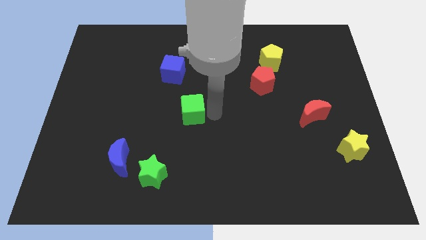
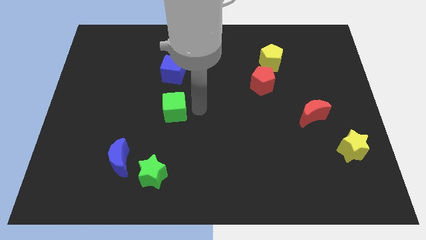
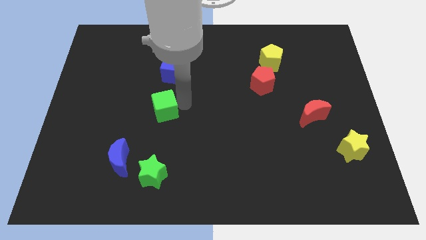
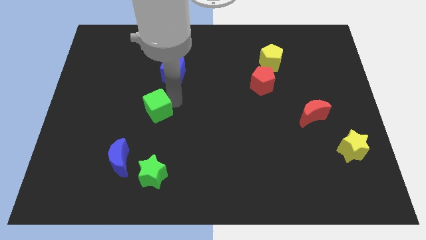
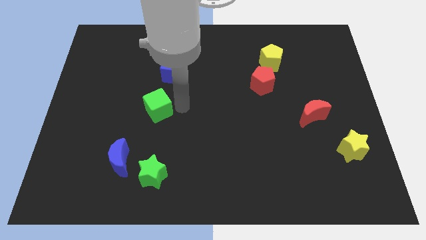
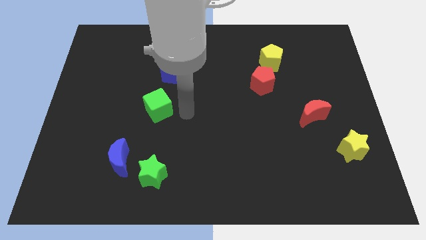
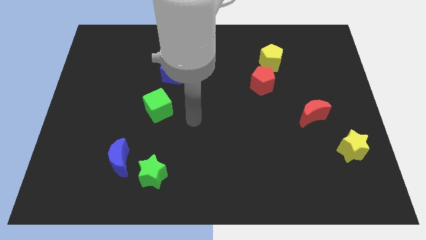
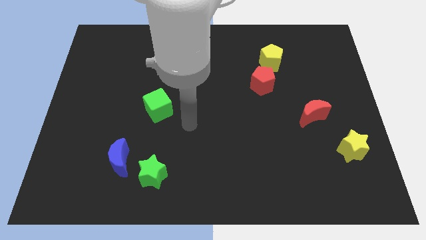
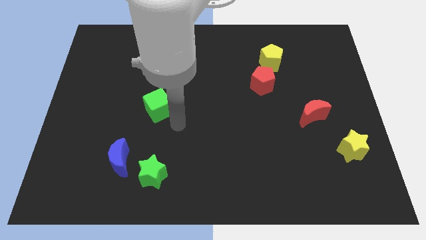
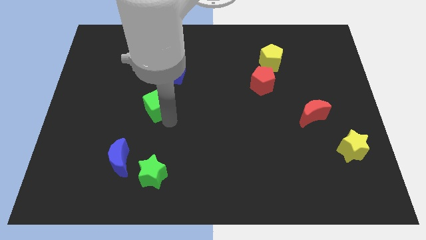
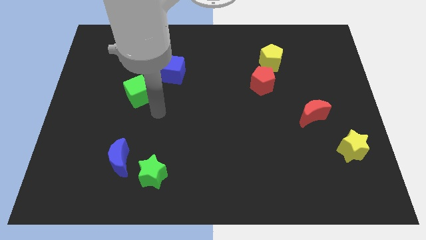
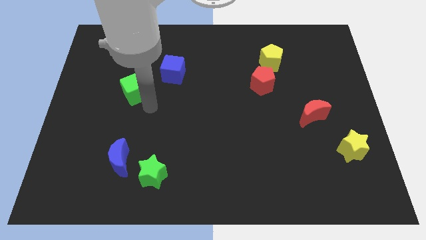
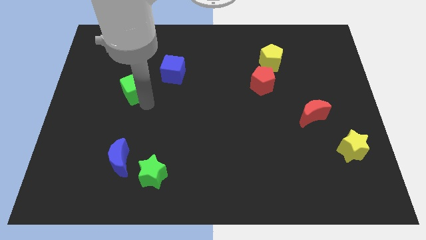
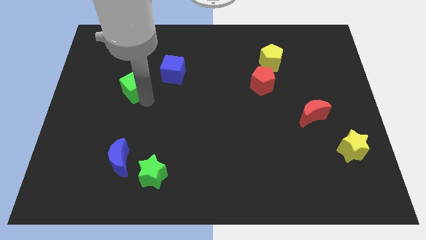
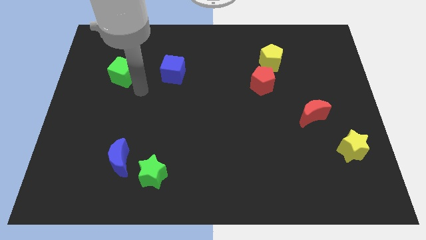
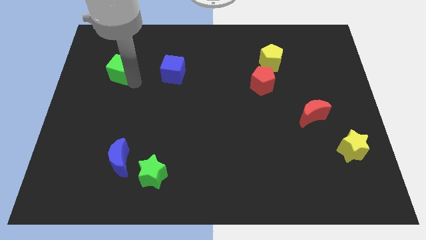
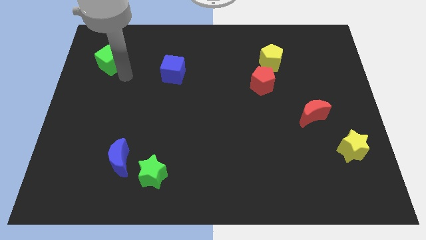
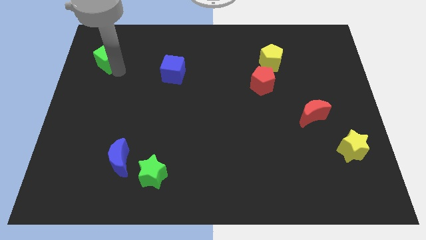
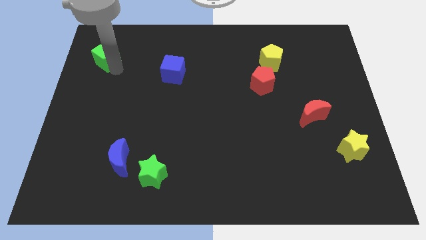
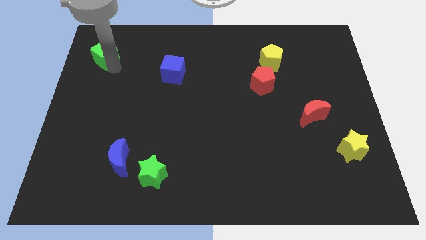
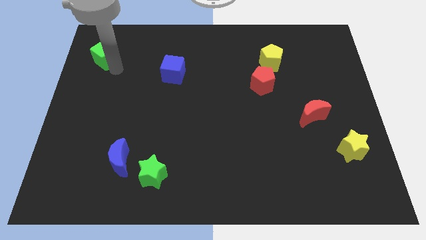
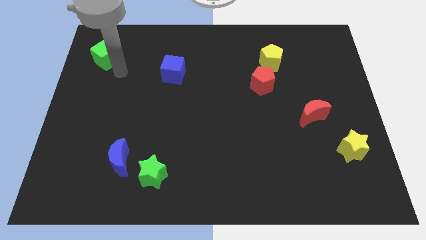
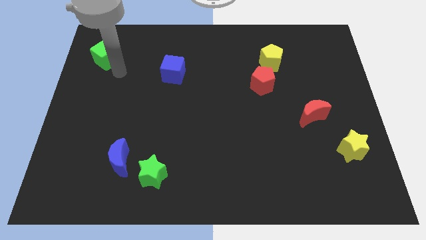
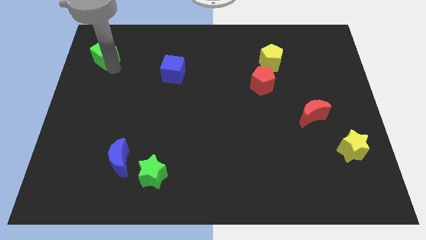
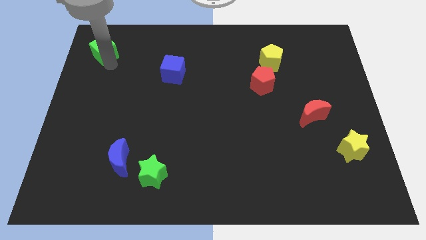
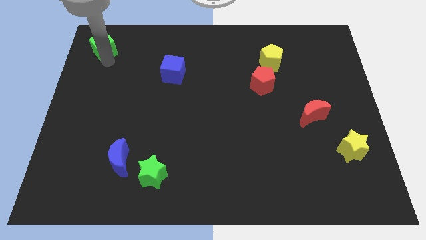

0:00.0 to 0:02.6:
push the green cube towards the top left corner

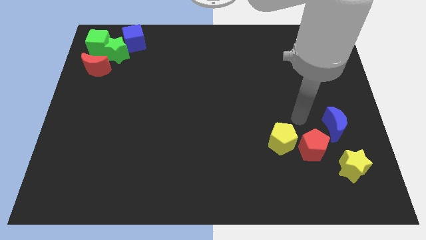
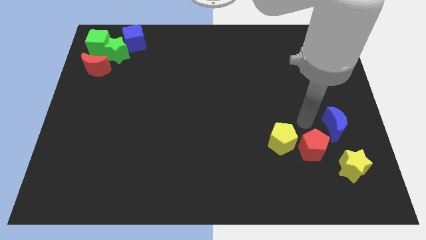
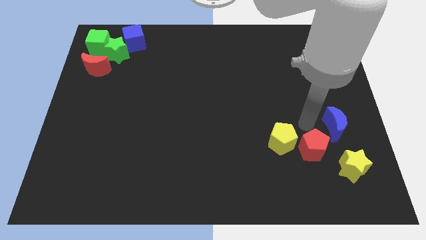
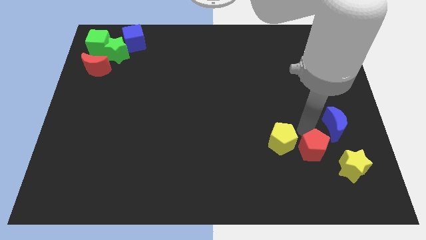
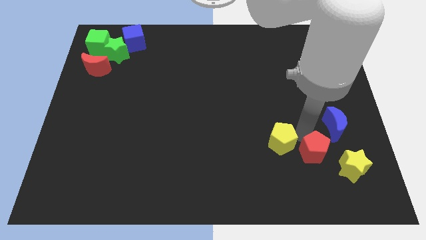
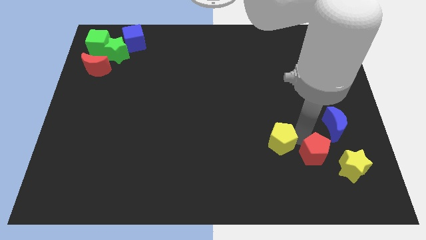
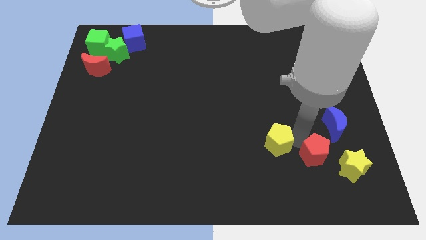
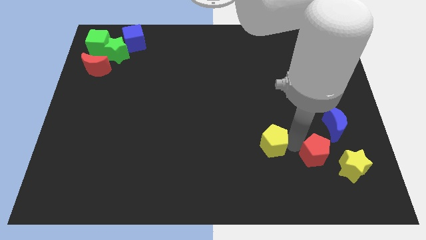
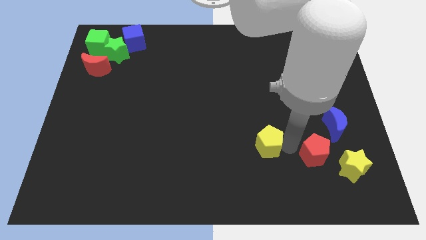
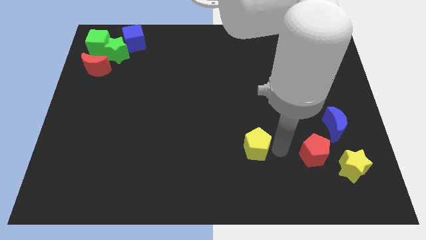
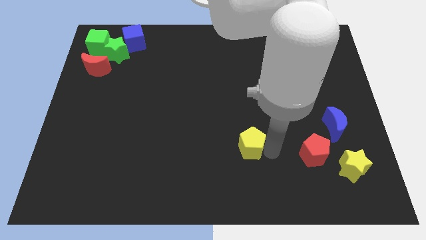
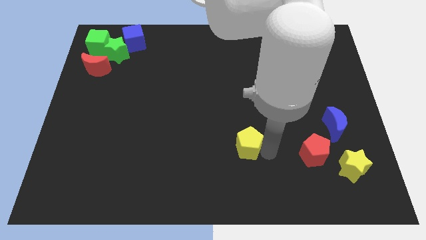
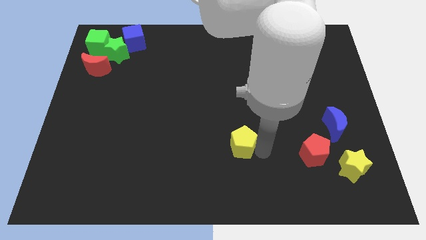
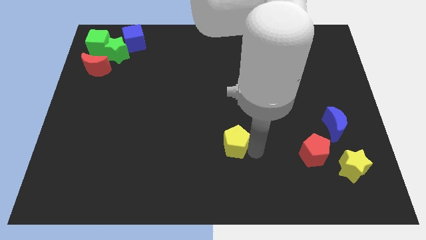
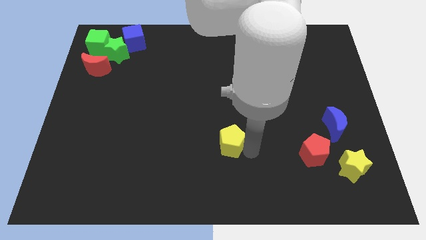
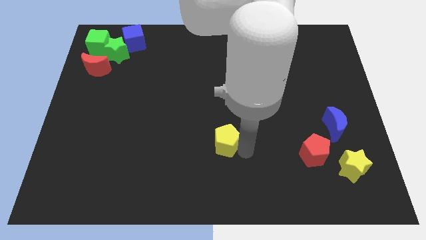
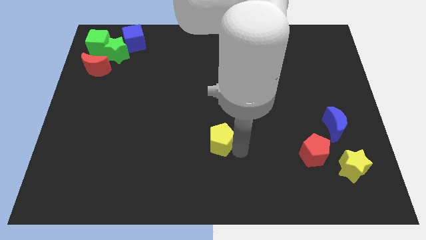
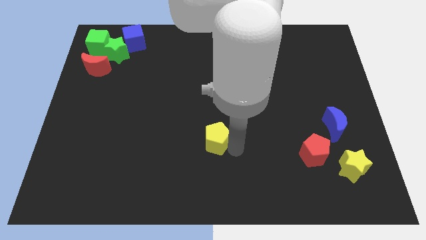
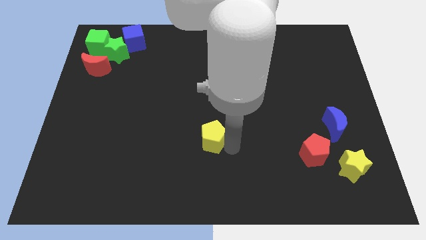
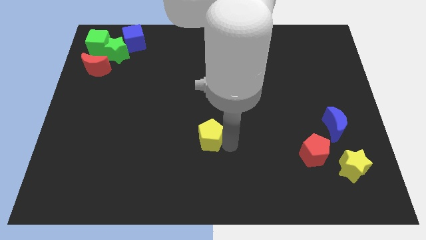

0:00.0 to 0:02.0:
separate the yellow pentagon from the red pentagon

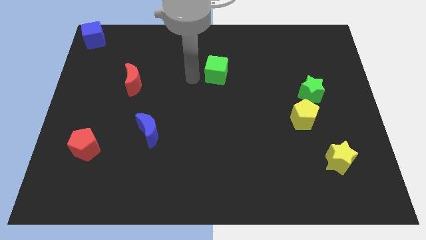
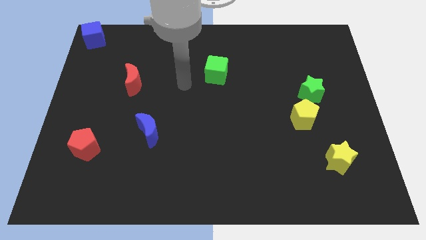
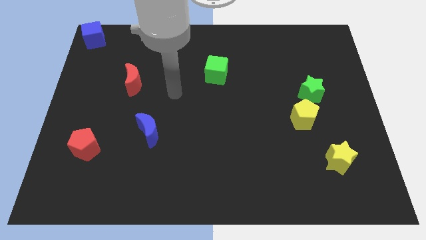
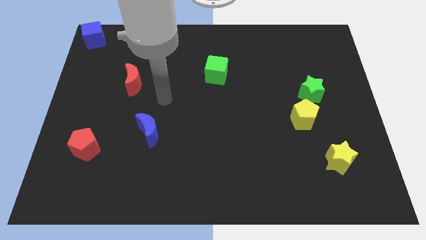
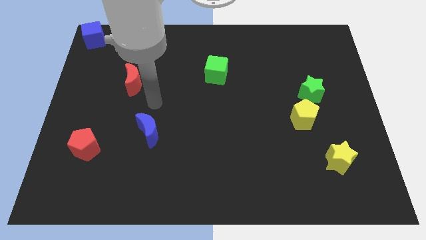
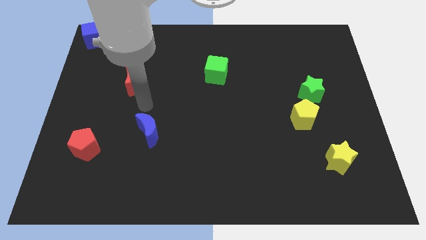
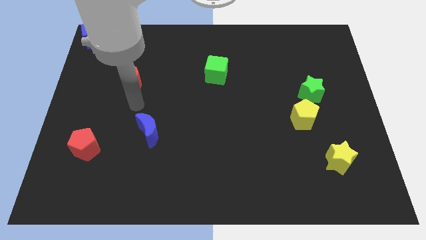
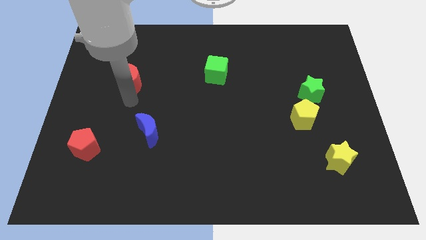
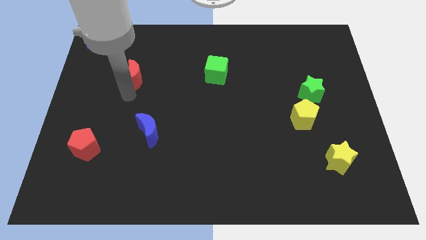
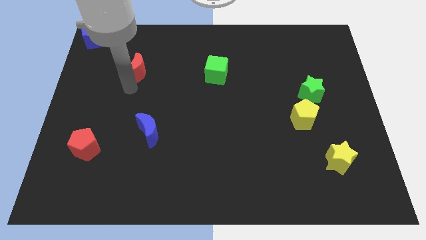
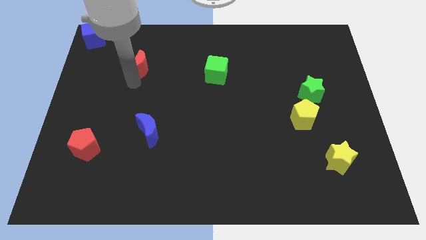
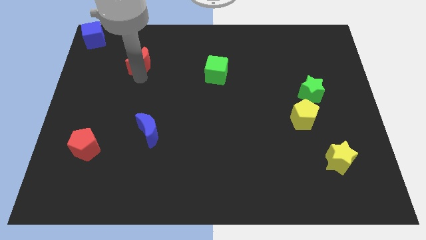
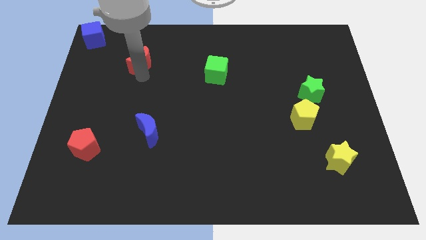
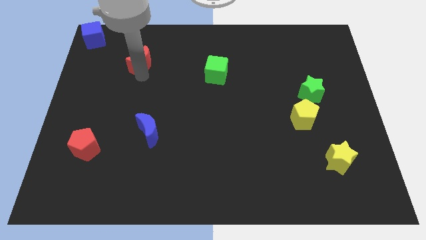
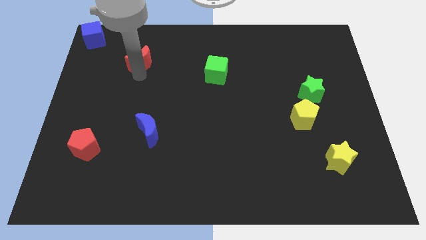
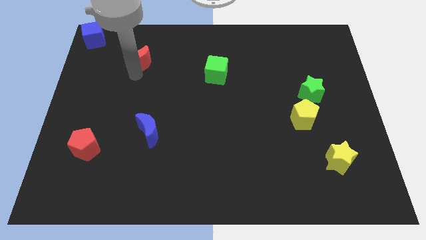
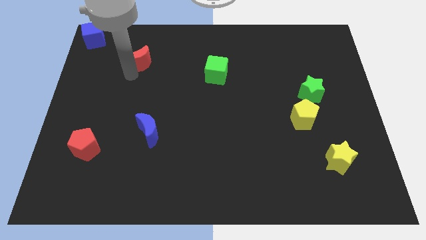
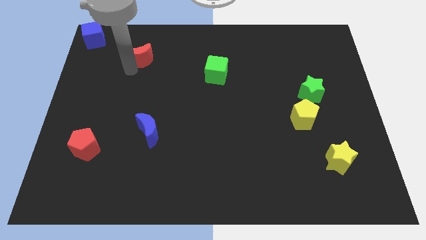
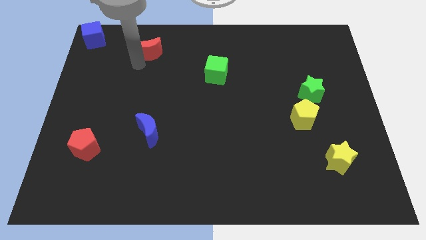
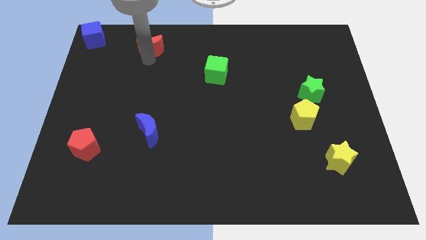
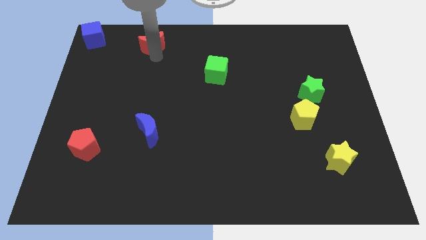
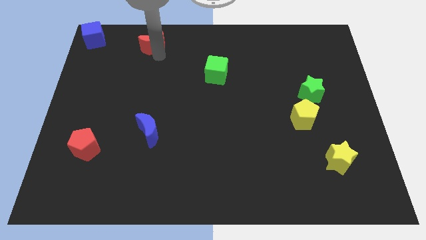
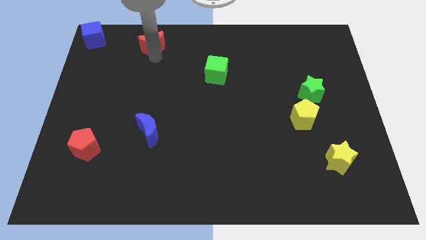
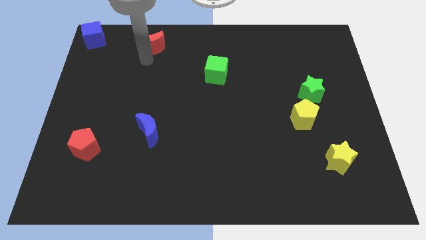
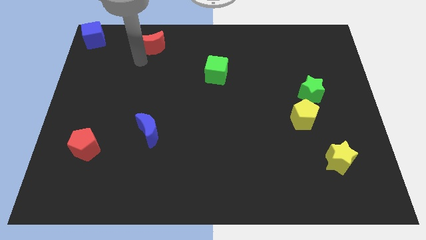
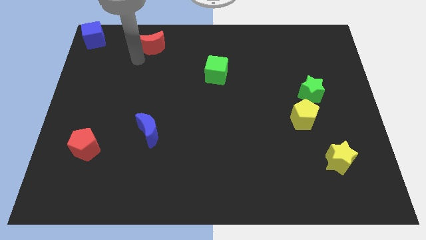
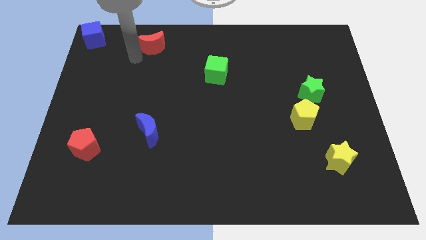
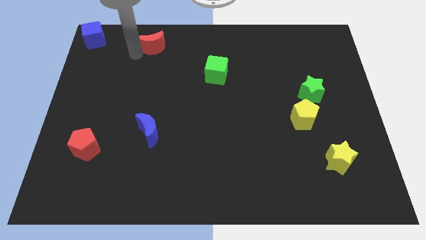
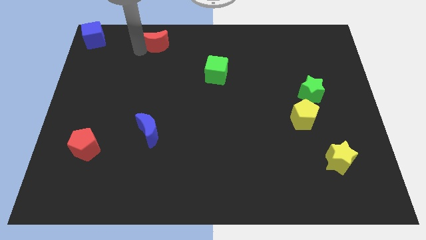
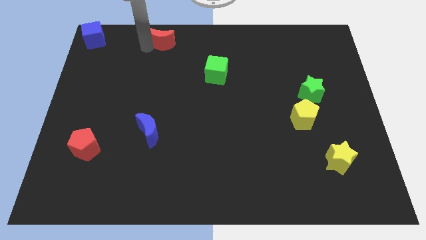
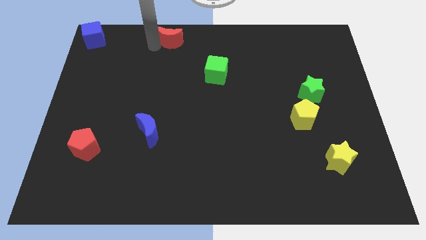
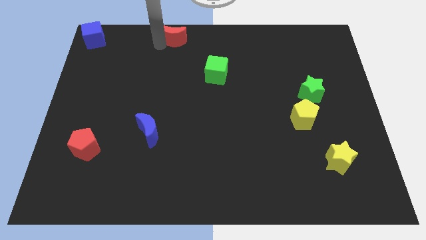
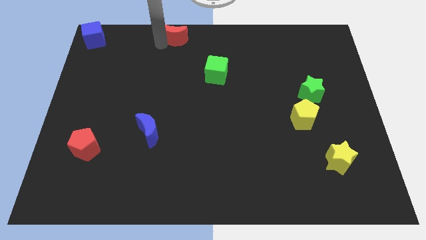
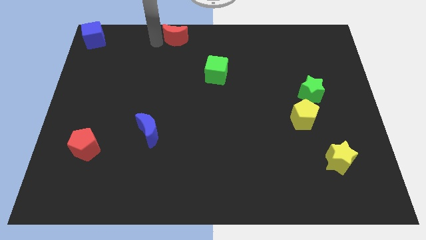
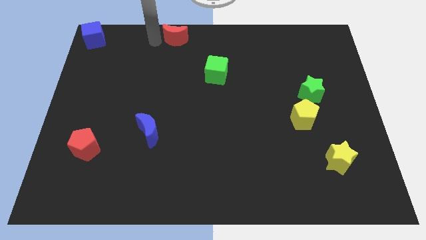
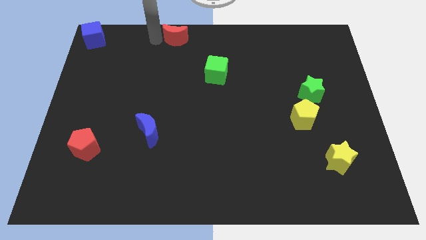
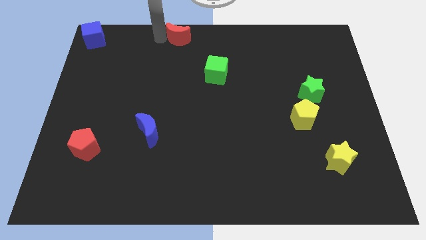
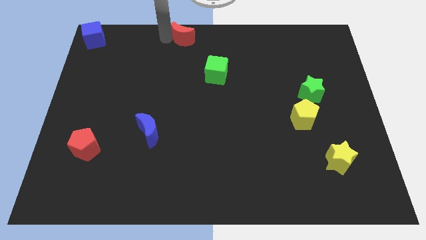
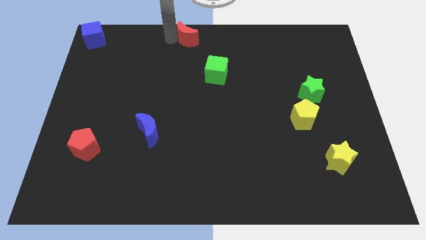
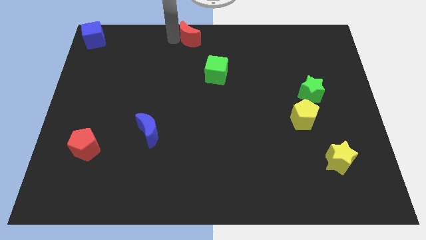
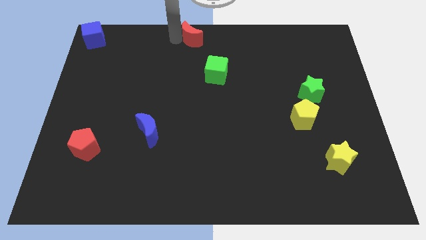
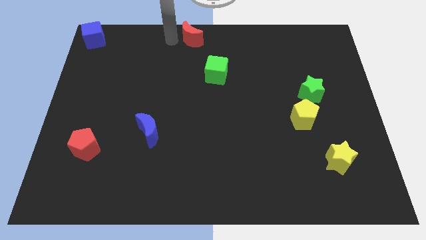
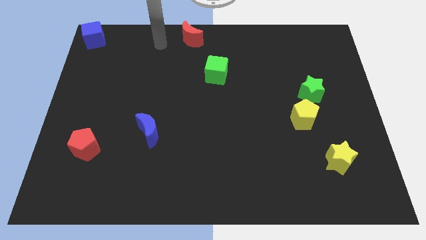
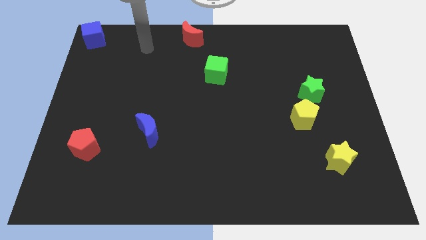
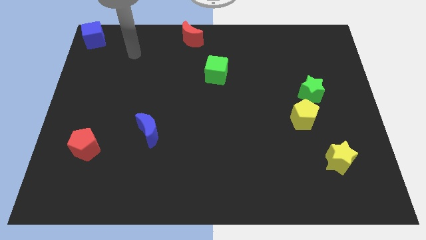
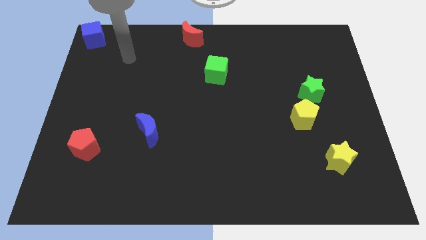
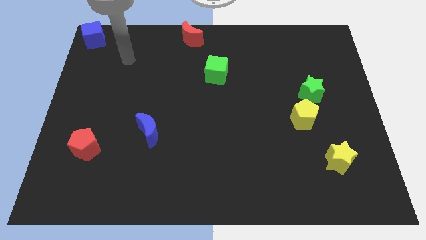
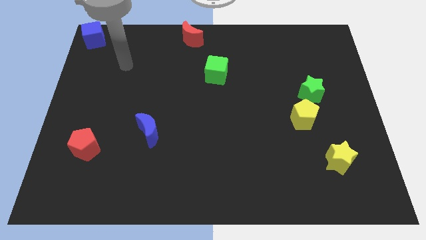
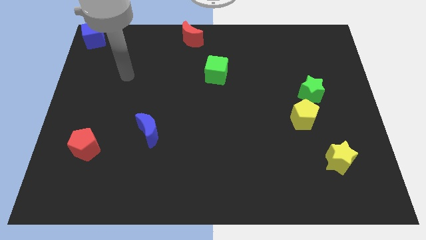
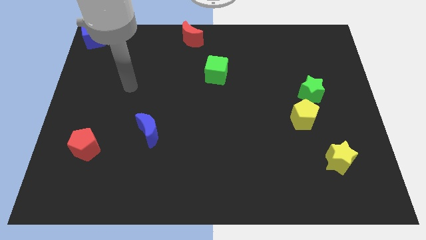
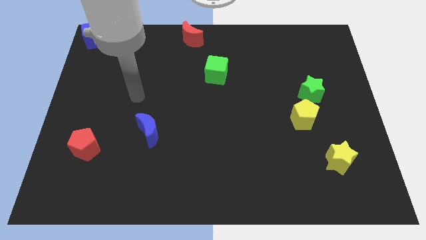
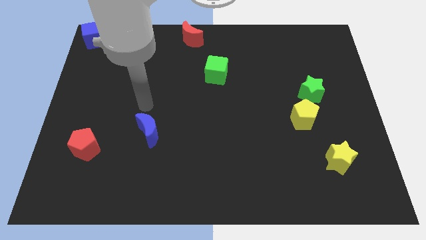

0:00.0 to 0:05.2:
move the red moon to the top center of the board
